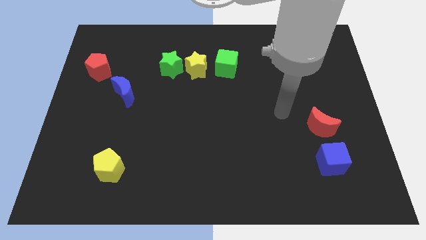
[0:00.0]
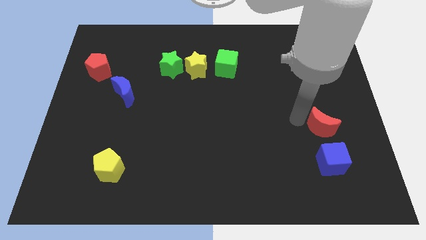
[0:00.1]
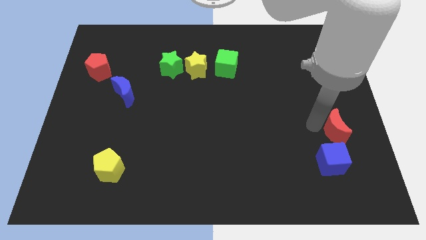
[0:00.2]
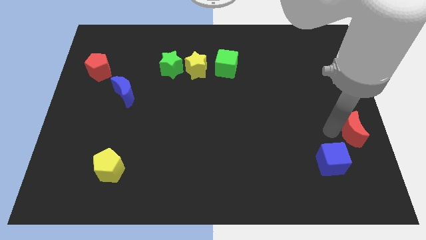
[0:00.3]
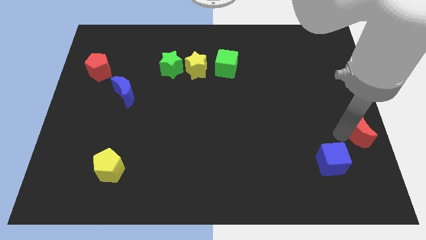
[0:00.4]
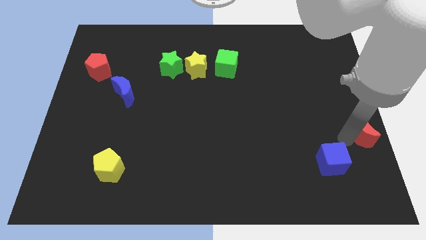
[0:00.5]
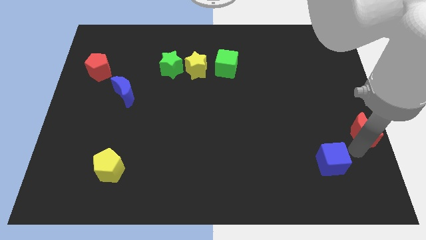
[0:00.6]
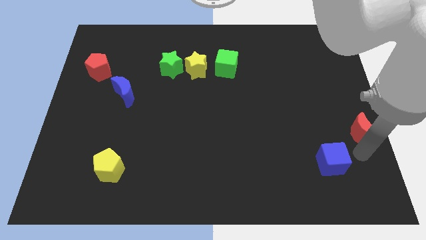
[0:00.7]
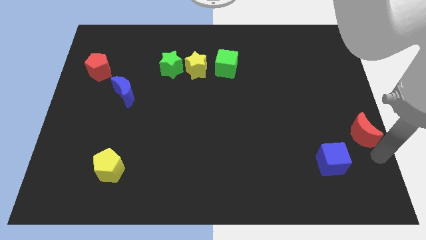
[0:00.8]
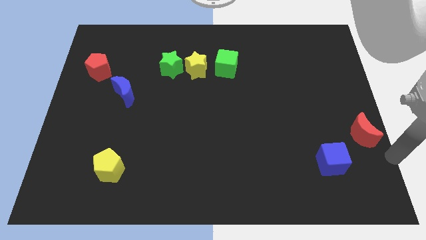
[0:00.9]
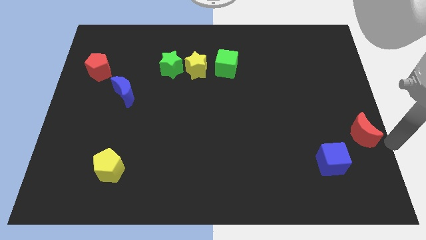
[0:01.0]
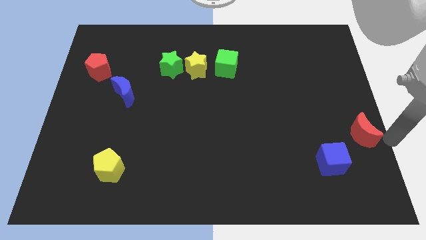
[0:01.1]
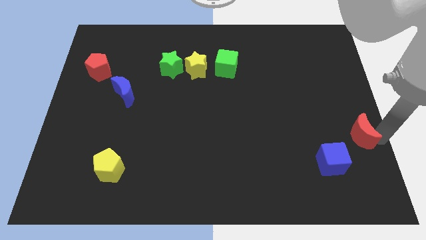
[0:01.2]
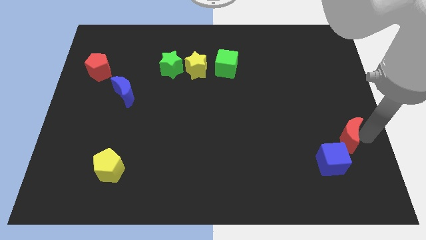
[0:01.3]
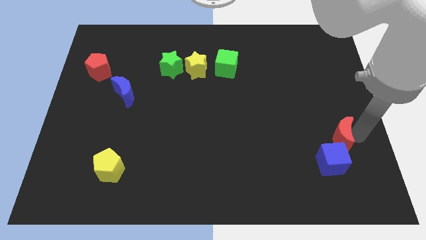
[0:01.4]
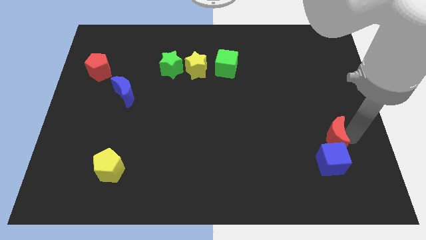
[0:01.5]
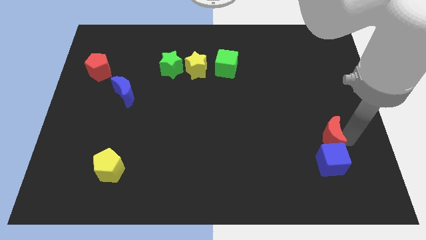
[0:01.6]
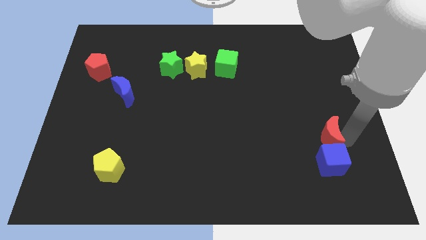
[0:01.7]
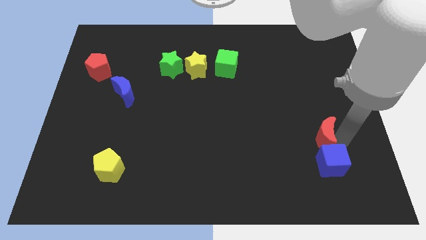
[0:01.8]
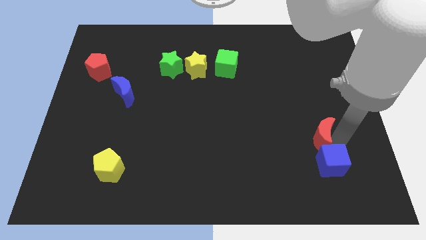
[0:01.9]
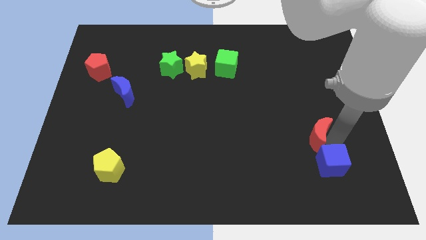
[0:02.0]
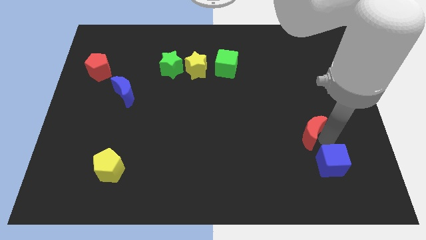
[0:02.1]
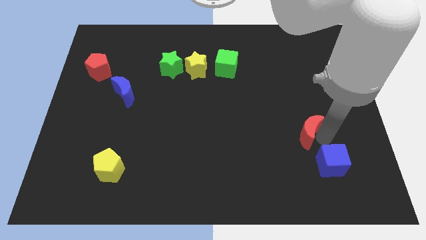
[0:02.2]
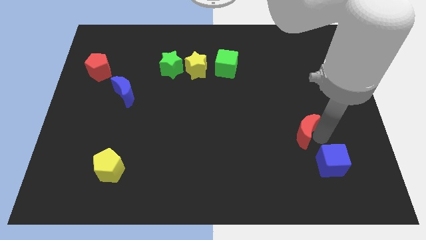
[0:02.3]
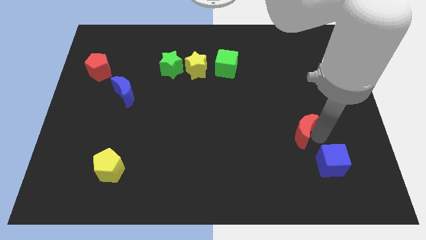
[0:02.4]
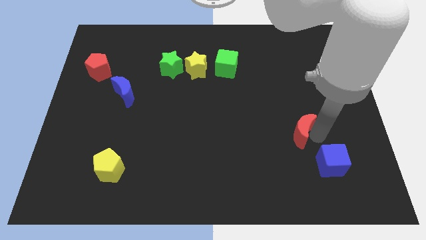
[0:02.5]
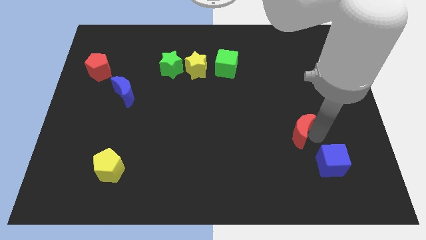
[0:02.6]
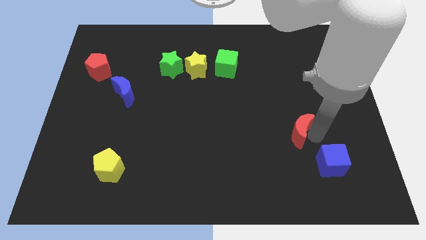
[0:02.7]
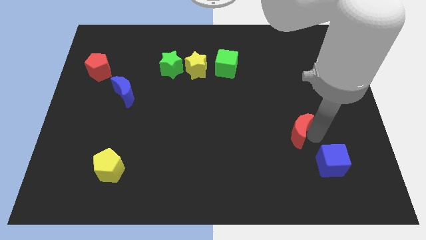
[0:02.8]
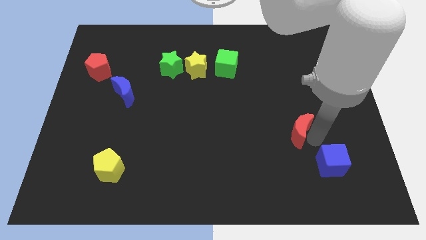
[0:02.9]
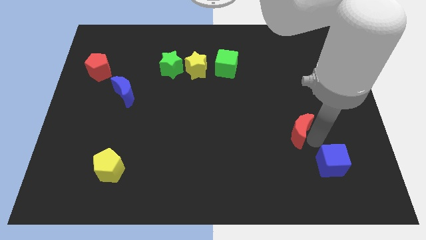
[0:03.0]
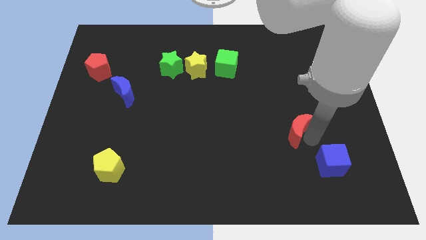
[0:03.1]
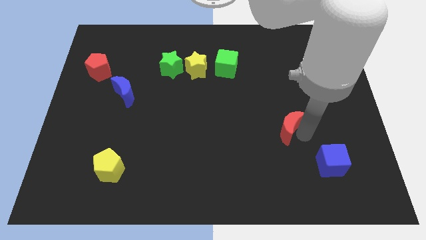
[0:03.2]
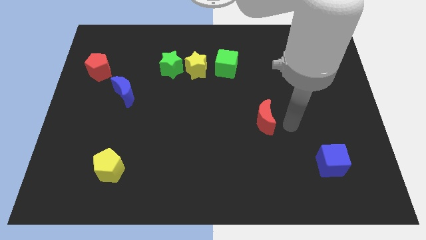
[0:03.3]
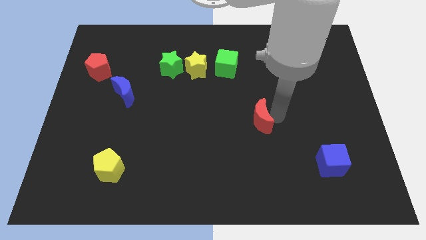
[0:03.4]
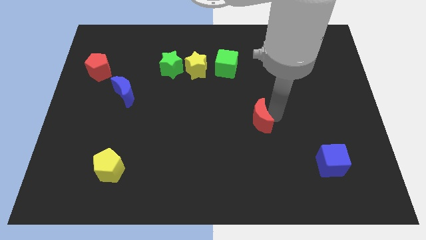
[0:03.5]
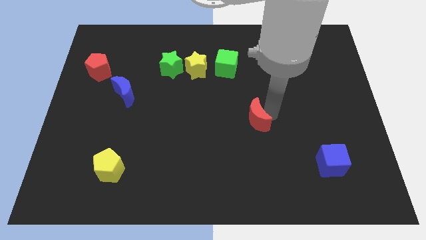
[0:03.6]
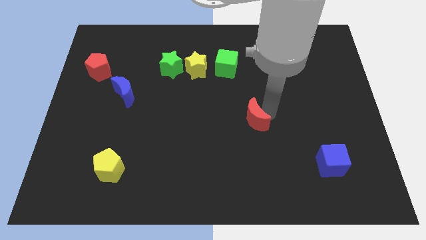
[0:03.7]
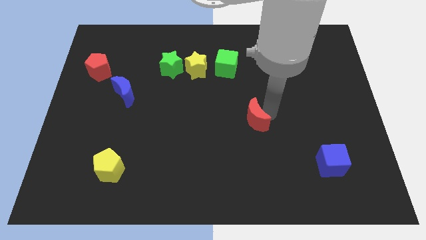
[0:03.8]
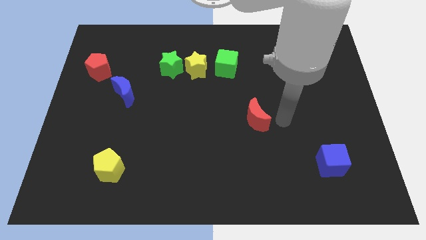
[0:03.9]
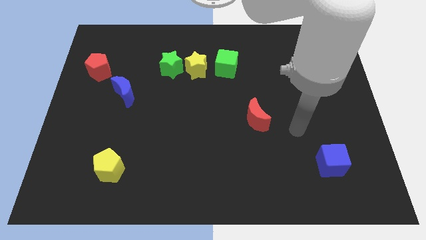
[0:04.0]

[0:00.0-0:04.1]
move the red crescent away from the blue cube

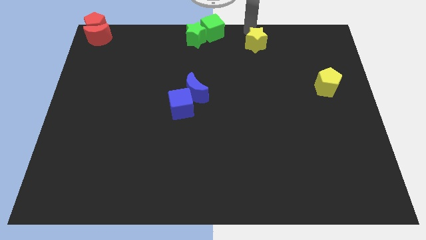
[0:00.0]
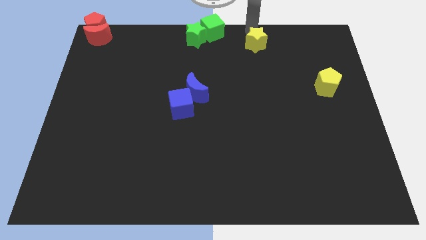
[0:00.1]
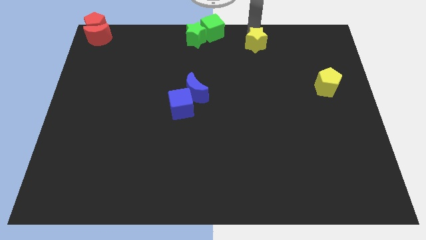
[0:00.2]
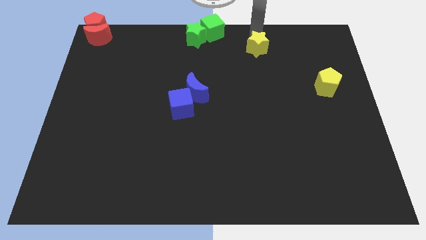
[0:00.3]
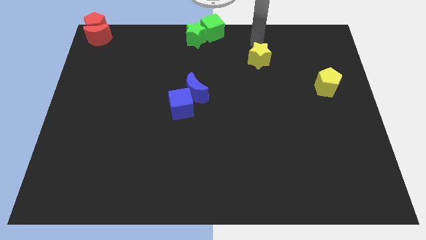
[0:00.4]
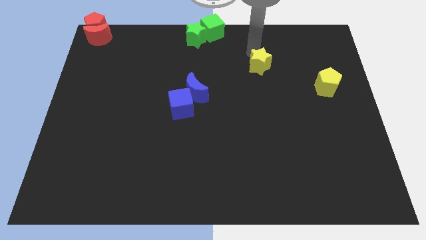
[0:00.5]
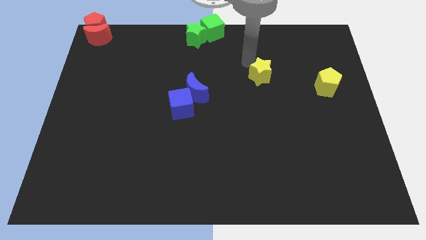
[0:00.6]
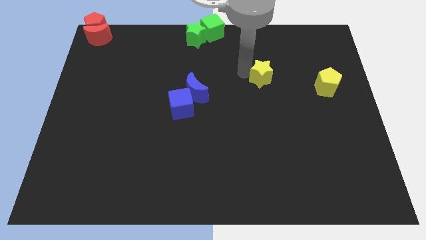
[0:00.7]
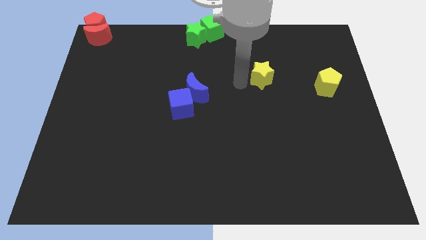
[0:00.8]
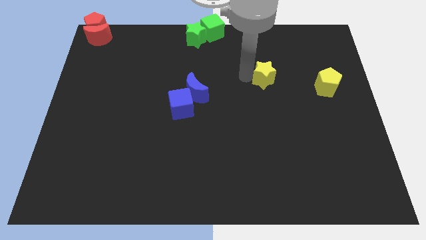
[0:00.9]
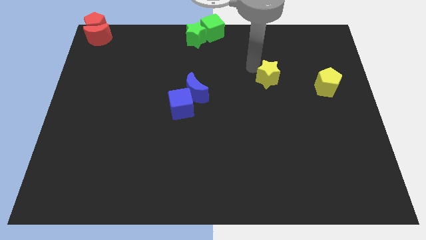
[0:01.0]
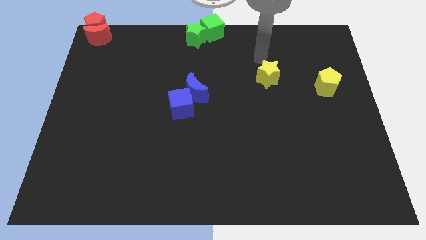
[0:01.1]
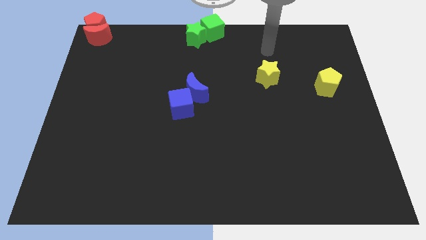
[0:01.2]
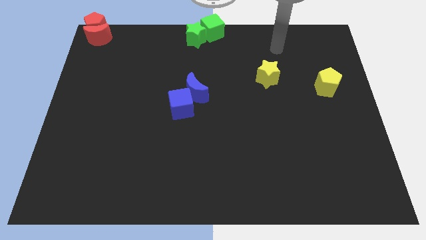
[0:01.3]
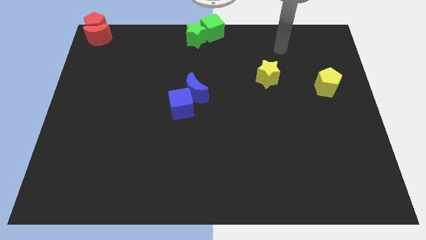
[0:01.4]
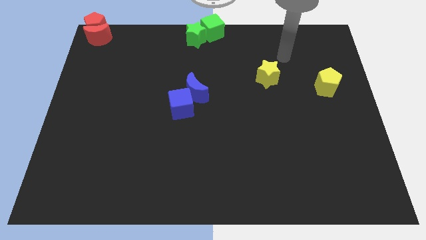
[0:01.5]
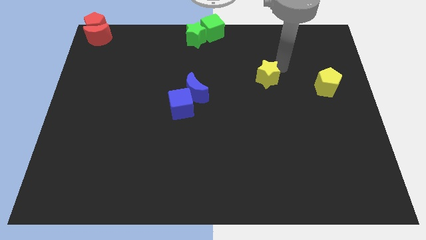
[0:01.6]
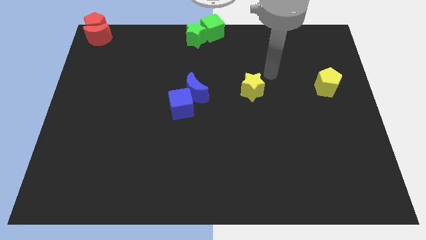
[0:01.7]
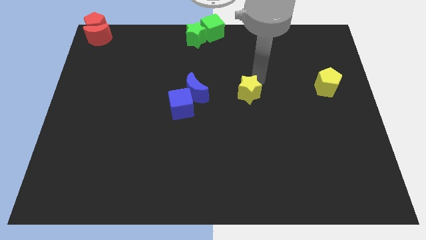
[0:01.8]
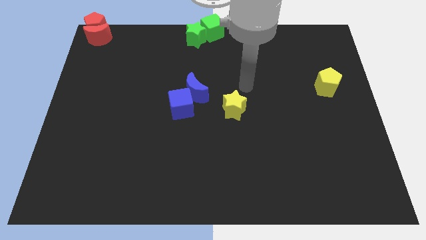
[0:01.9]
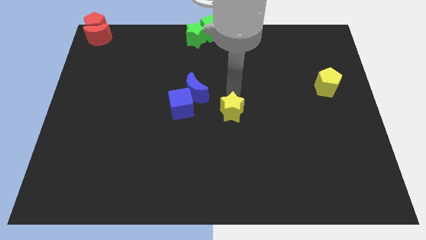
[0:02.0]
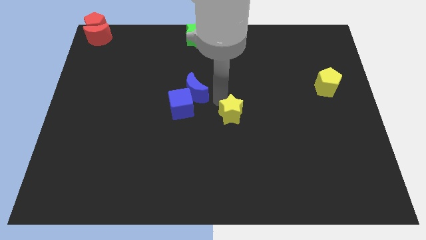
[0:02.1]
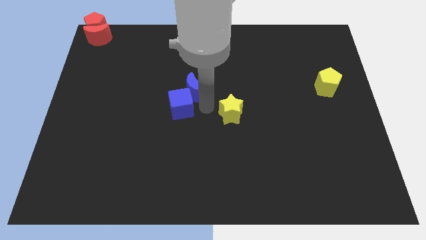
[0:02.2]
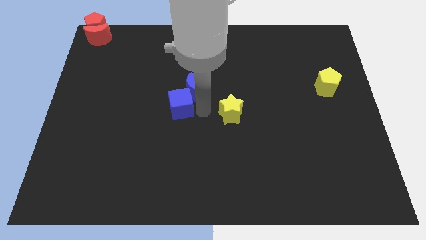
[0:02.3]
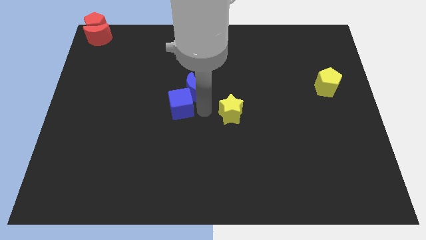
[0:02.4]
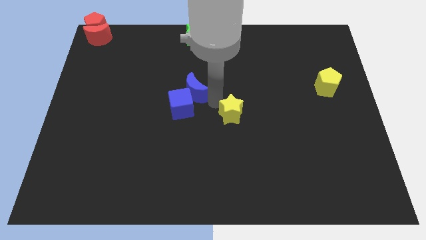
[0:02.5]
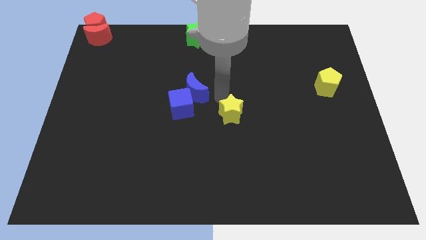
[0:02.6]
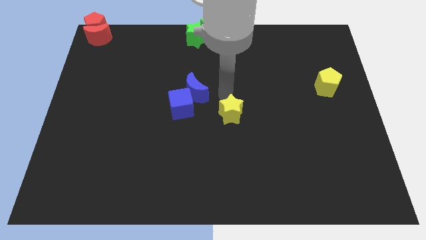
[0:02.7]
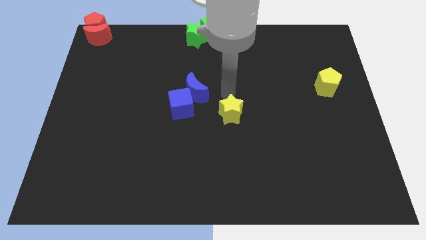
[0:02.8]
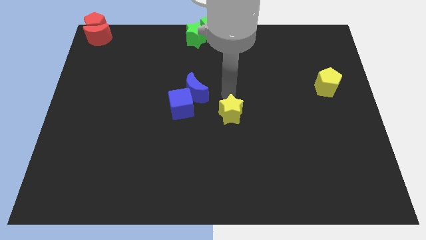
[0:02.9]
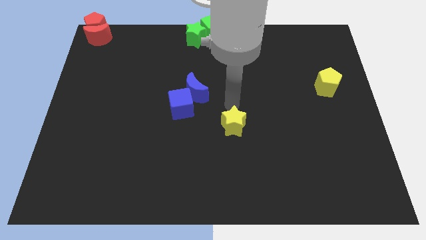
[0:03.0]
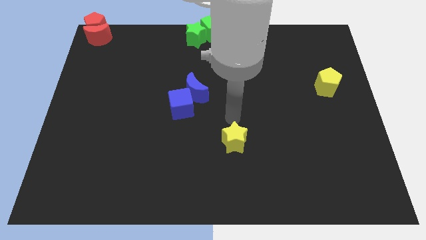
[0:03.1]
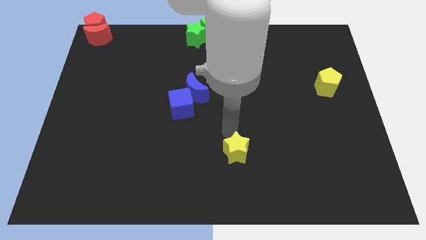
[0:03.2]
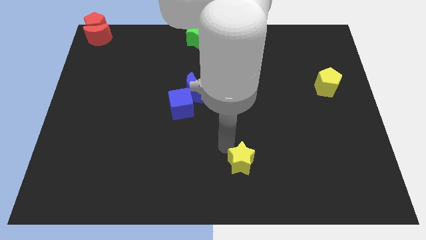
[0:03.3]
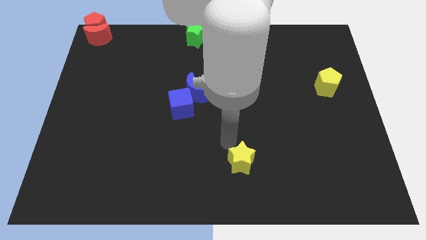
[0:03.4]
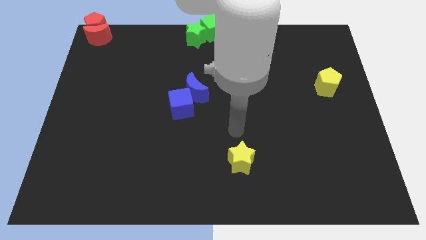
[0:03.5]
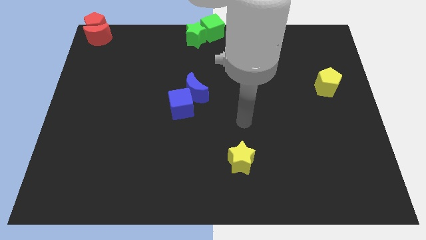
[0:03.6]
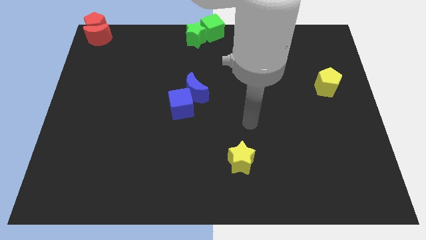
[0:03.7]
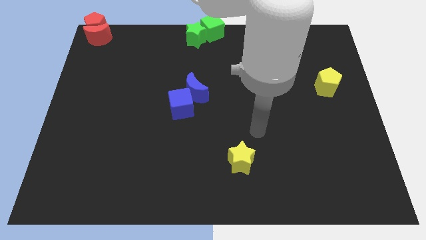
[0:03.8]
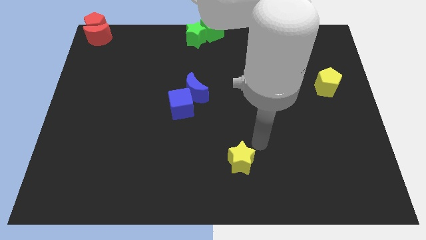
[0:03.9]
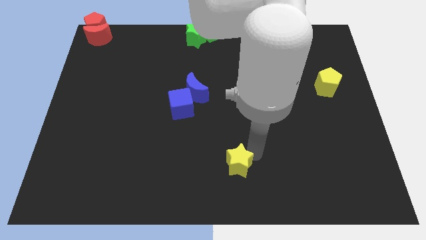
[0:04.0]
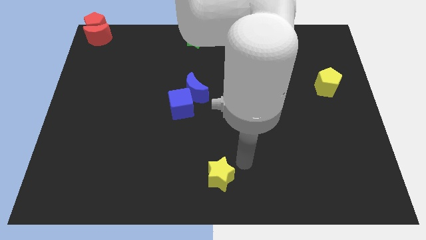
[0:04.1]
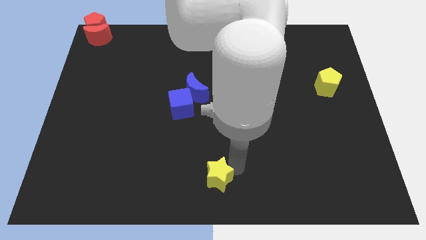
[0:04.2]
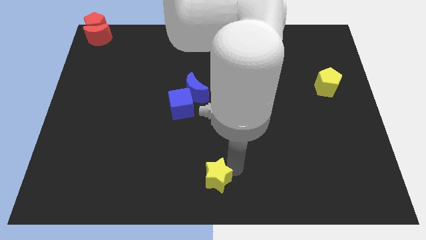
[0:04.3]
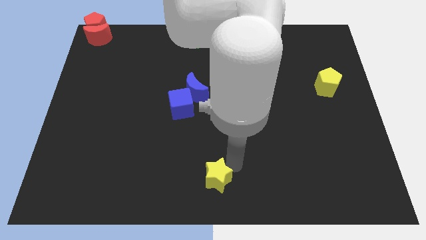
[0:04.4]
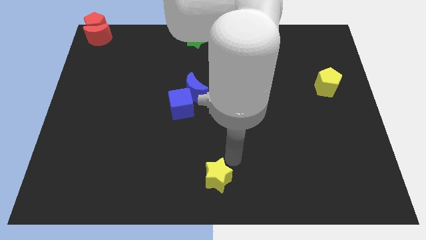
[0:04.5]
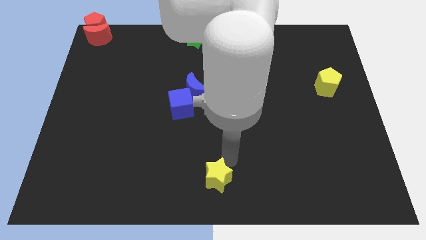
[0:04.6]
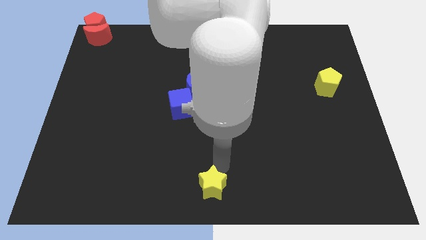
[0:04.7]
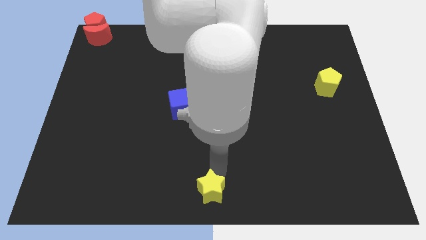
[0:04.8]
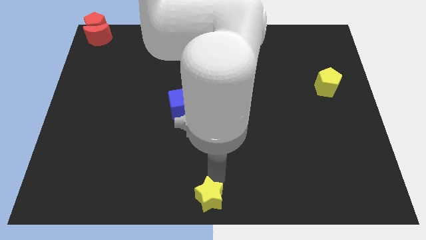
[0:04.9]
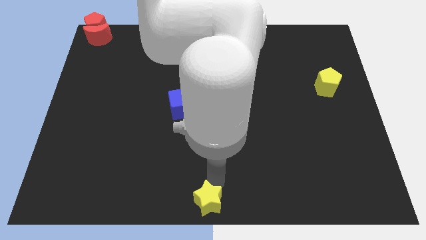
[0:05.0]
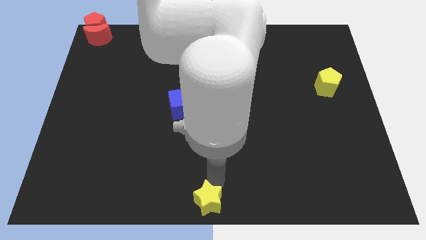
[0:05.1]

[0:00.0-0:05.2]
push the yellow star to the bottom center of the board
